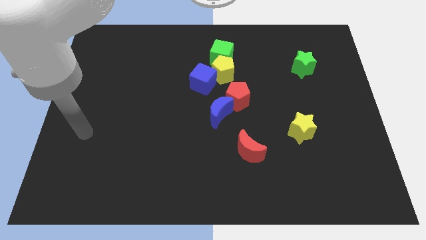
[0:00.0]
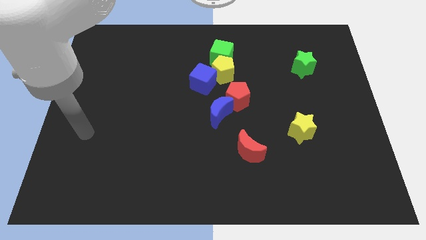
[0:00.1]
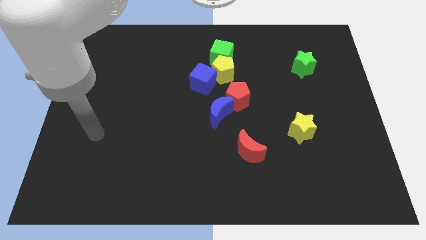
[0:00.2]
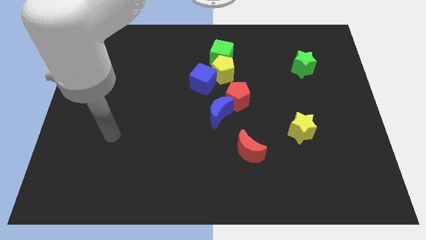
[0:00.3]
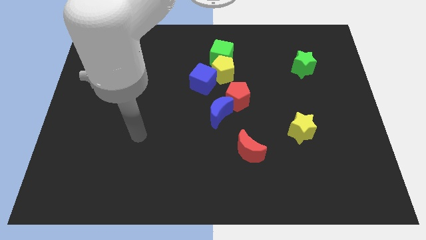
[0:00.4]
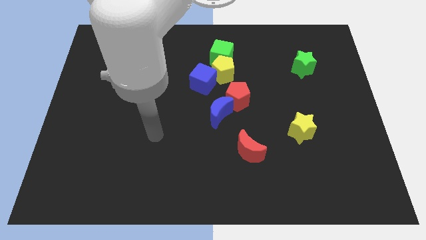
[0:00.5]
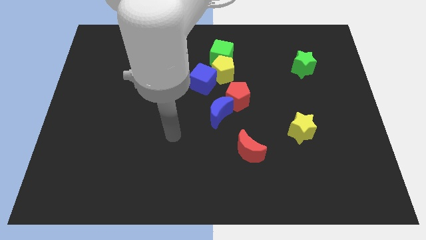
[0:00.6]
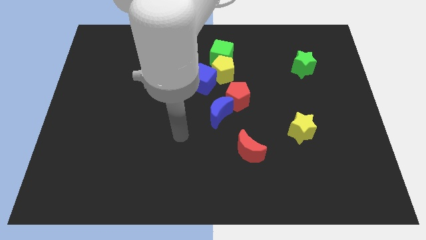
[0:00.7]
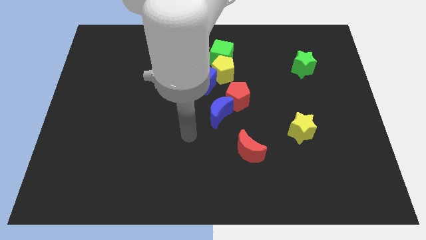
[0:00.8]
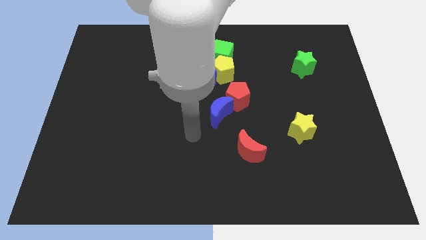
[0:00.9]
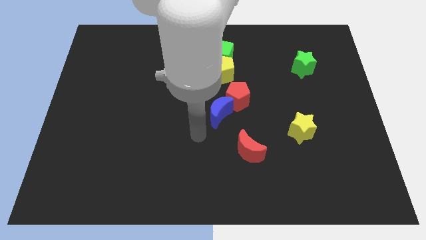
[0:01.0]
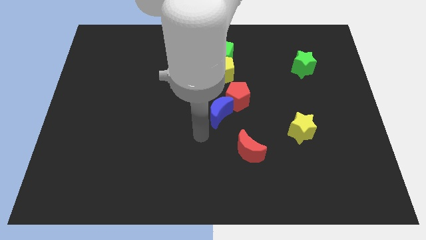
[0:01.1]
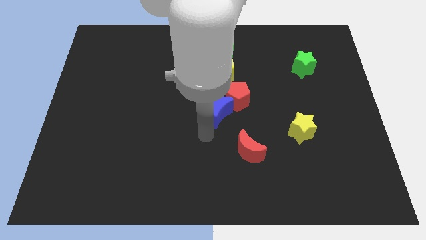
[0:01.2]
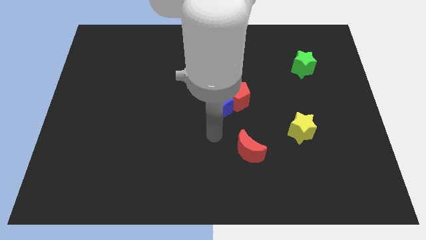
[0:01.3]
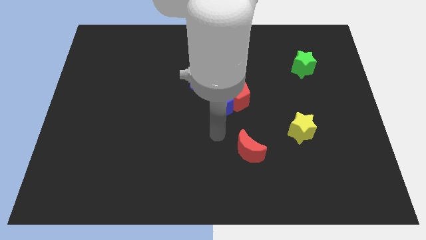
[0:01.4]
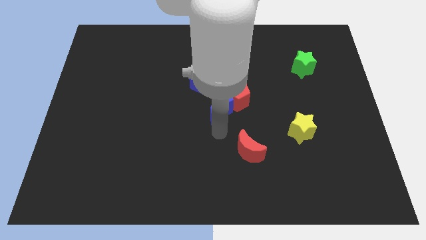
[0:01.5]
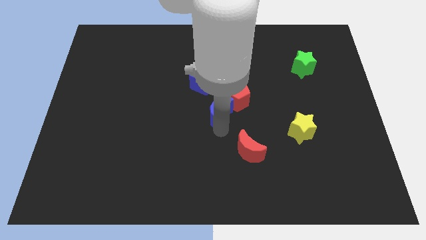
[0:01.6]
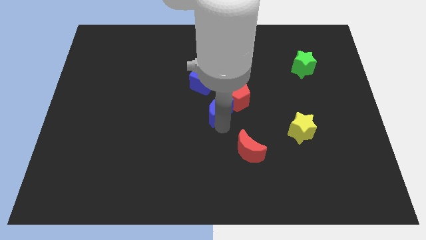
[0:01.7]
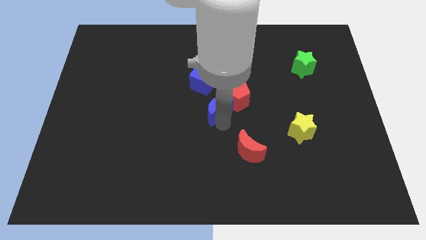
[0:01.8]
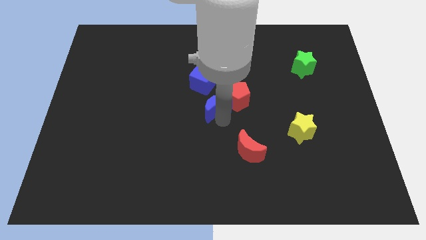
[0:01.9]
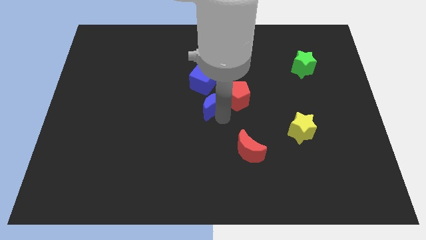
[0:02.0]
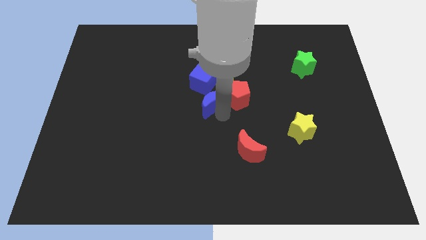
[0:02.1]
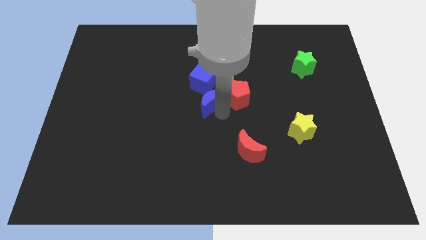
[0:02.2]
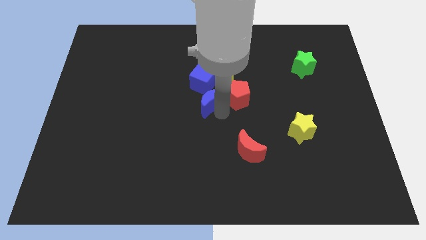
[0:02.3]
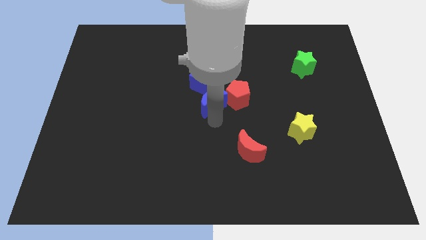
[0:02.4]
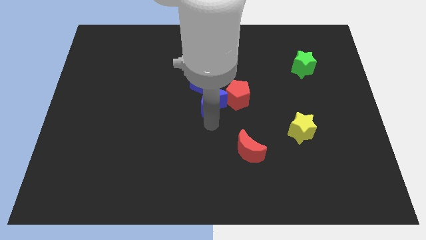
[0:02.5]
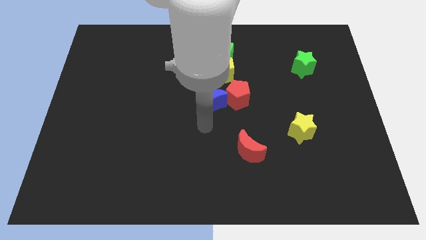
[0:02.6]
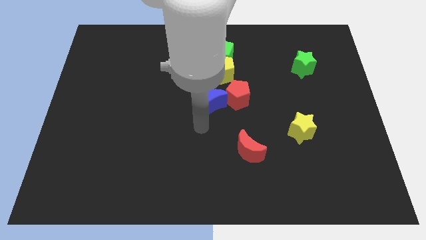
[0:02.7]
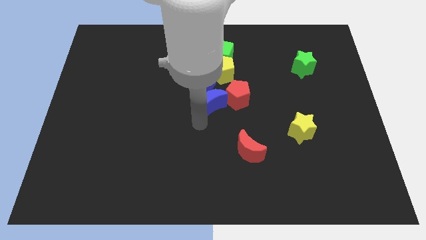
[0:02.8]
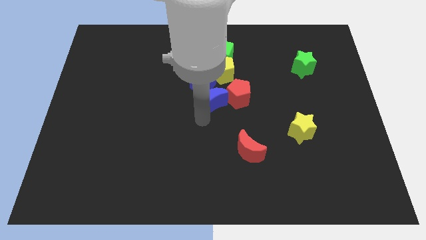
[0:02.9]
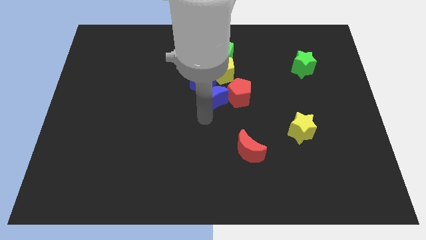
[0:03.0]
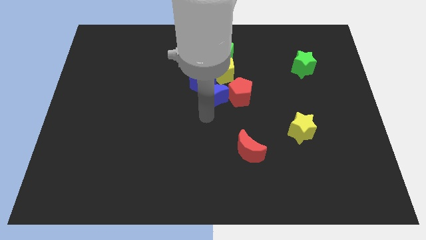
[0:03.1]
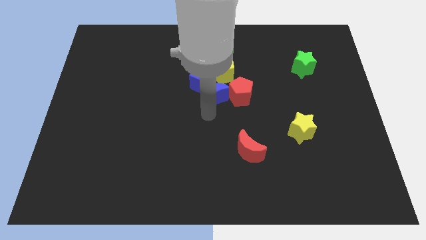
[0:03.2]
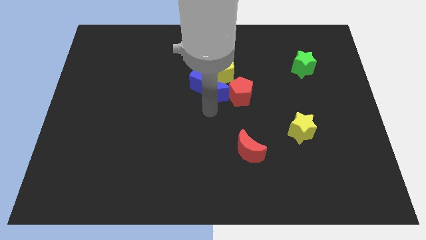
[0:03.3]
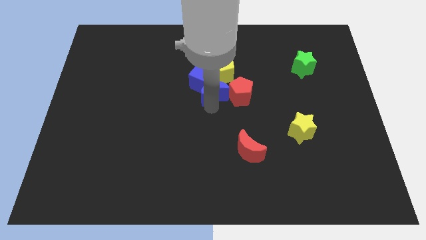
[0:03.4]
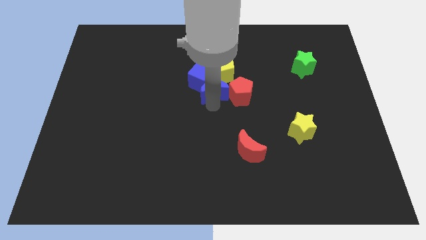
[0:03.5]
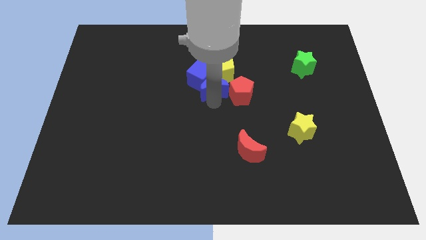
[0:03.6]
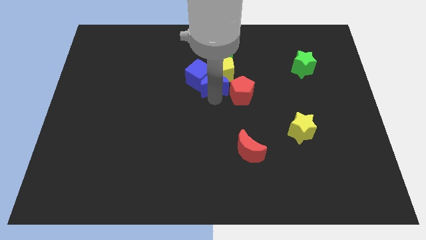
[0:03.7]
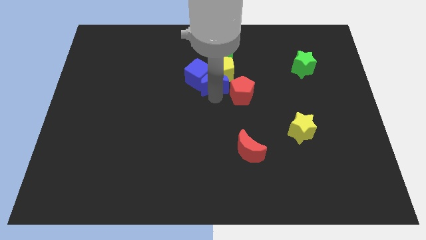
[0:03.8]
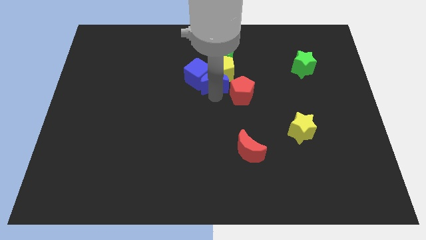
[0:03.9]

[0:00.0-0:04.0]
move the blue moon to the yellow pentagon

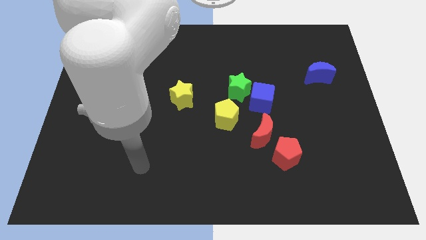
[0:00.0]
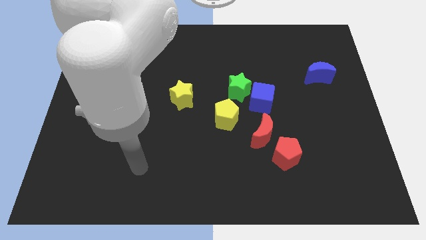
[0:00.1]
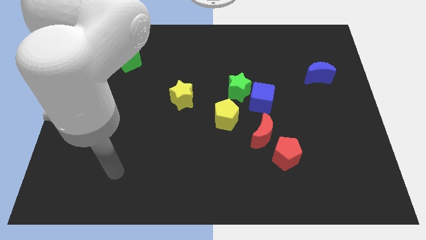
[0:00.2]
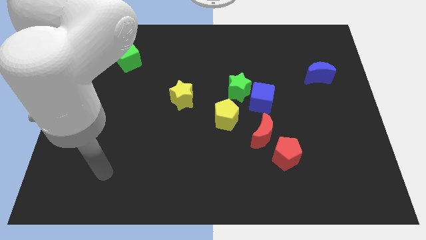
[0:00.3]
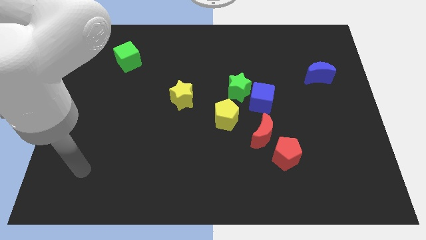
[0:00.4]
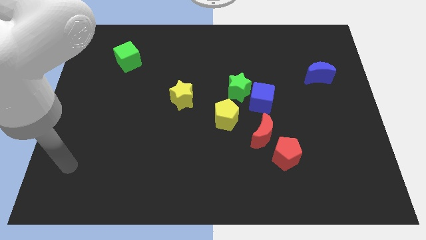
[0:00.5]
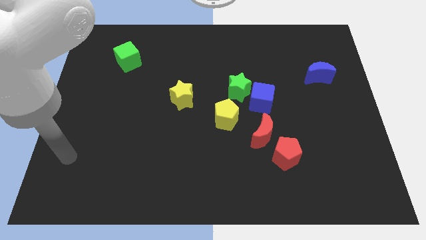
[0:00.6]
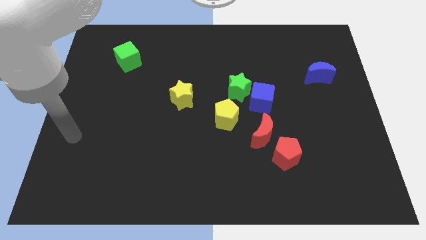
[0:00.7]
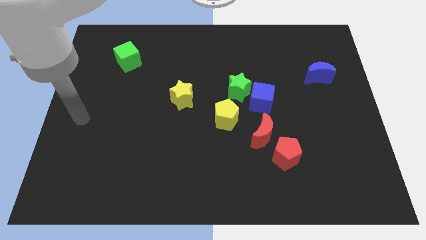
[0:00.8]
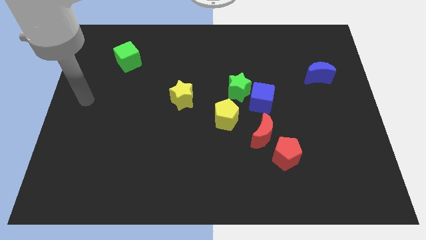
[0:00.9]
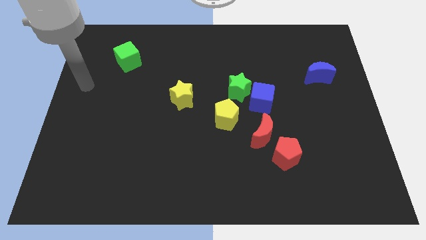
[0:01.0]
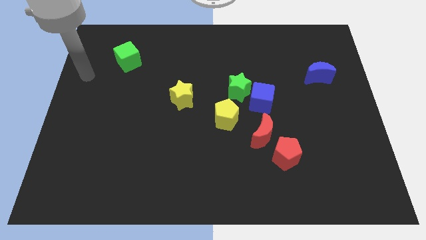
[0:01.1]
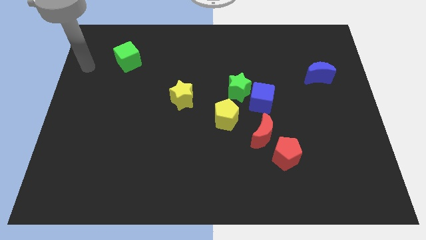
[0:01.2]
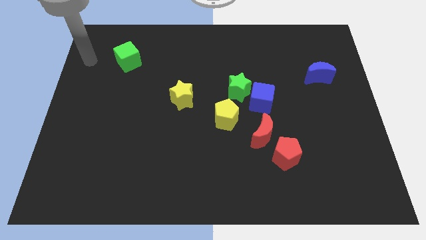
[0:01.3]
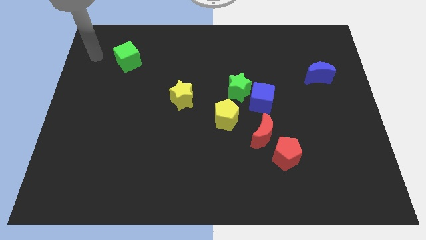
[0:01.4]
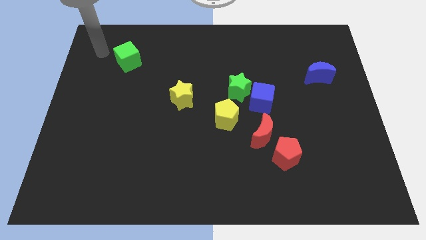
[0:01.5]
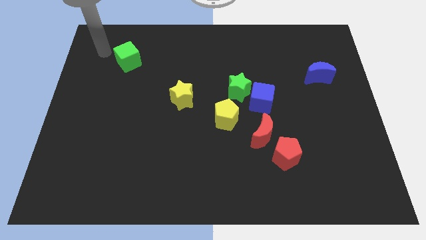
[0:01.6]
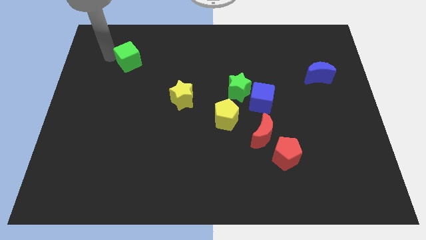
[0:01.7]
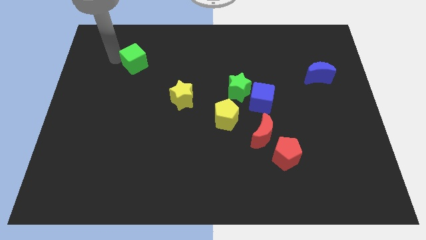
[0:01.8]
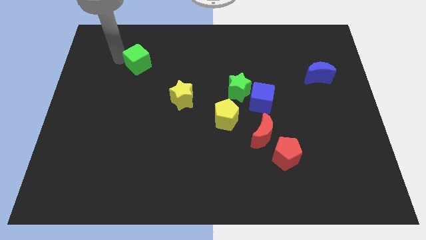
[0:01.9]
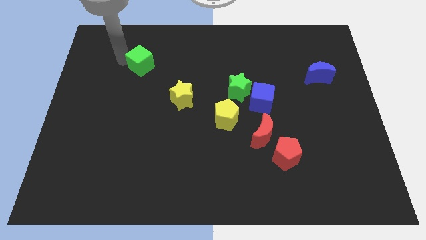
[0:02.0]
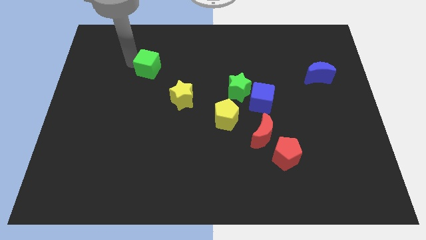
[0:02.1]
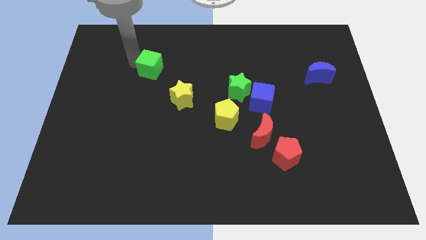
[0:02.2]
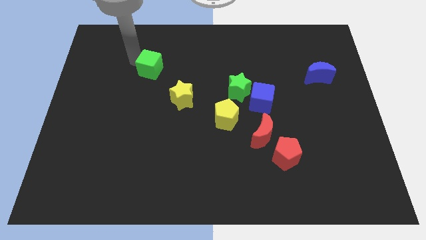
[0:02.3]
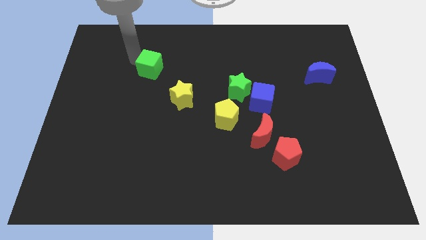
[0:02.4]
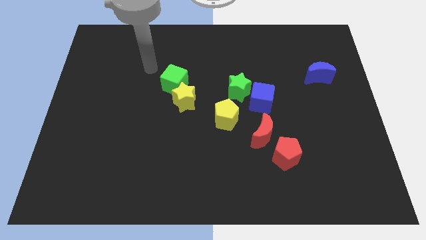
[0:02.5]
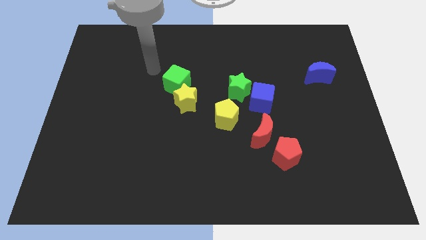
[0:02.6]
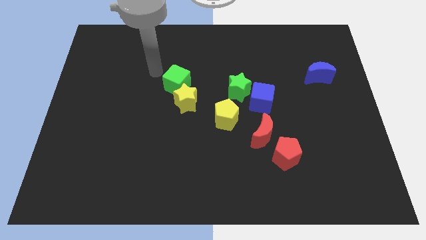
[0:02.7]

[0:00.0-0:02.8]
put the green cube next to the yellow star

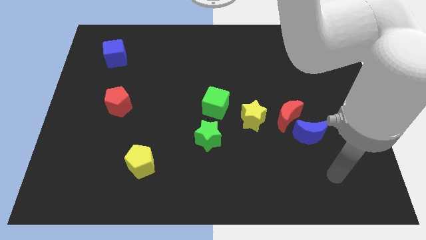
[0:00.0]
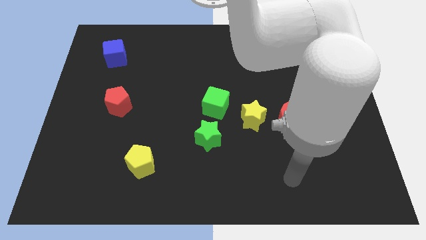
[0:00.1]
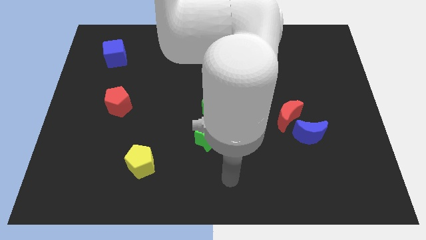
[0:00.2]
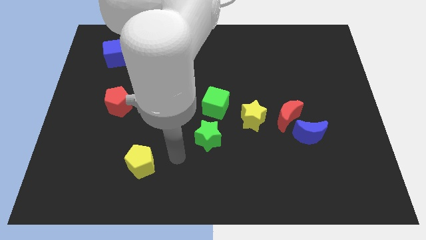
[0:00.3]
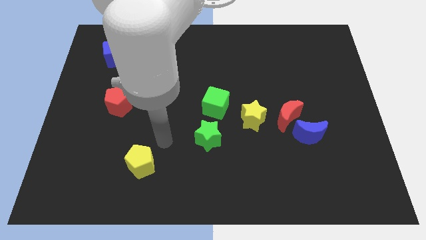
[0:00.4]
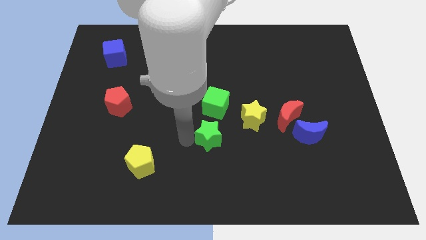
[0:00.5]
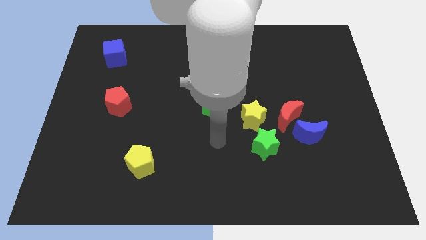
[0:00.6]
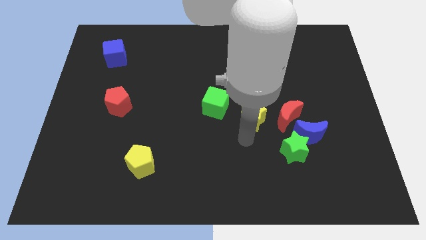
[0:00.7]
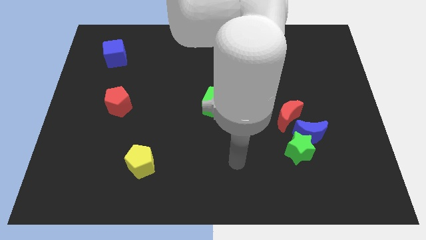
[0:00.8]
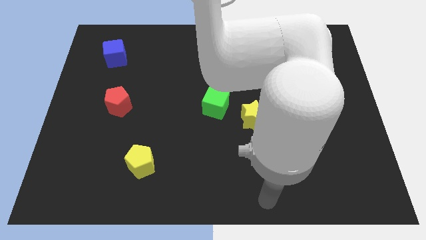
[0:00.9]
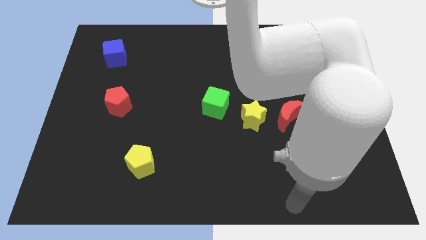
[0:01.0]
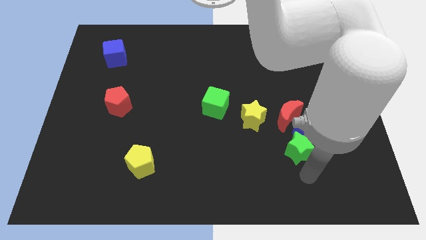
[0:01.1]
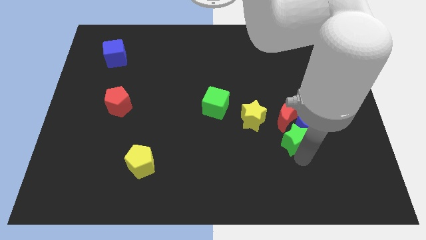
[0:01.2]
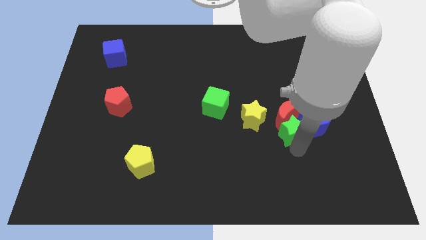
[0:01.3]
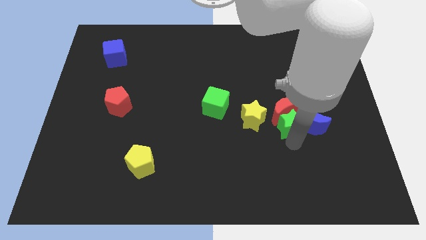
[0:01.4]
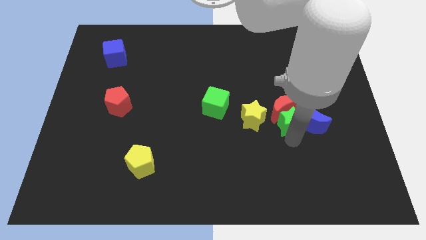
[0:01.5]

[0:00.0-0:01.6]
move the green star close to the red moon

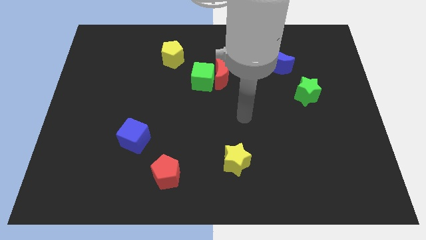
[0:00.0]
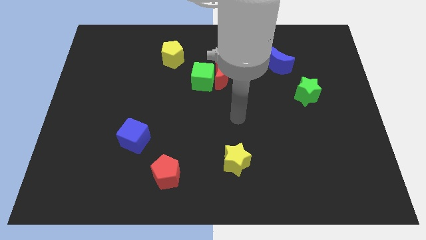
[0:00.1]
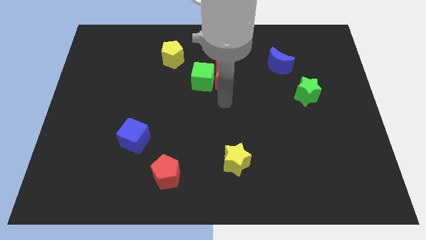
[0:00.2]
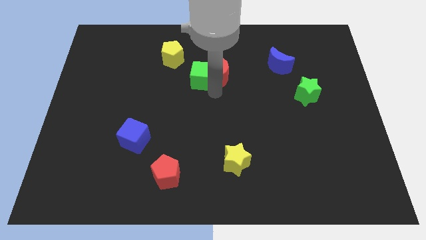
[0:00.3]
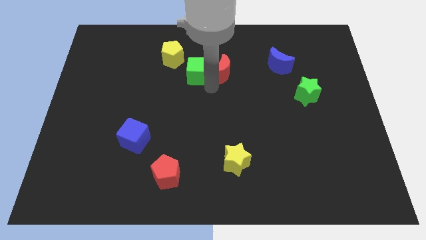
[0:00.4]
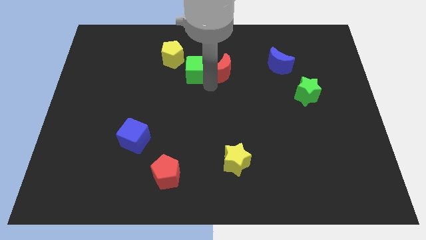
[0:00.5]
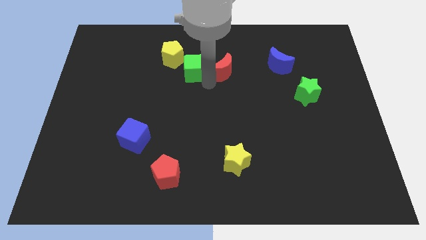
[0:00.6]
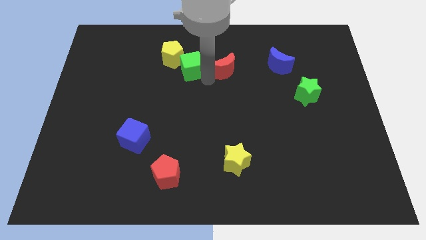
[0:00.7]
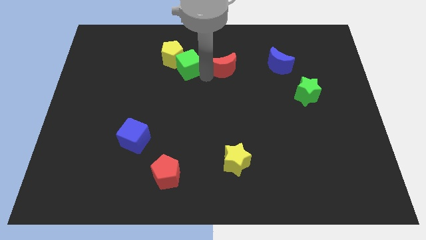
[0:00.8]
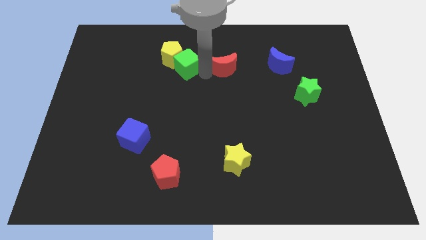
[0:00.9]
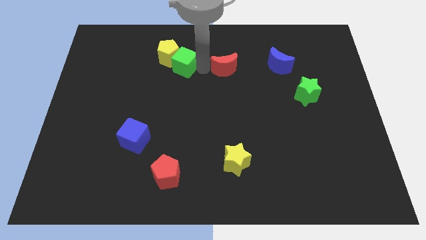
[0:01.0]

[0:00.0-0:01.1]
move the green cube close to the yellow pentagon
